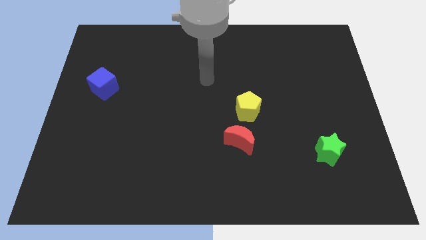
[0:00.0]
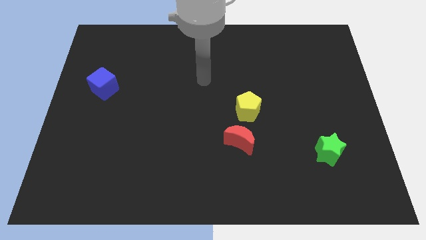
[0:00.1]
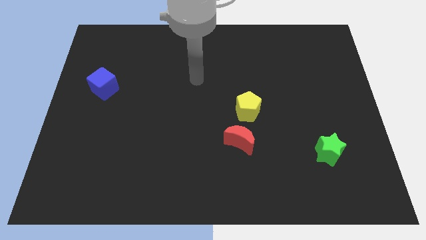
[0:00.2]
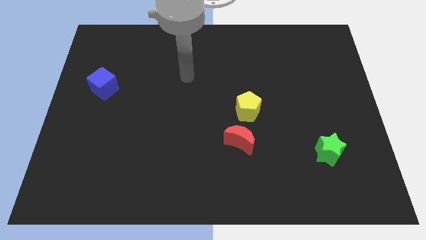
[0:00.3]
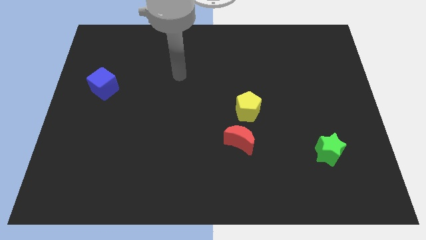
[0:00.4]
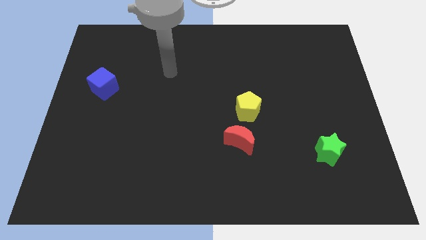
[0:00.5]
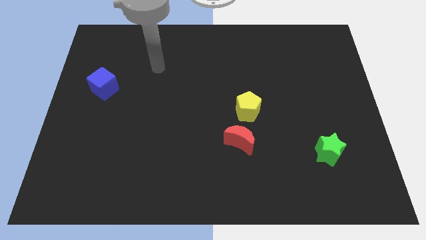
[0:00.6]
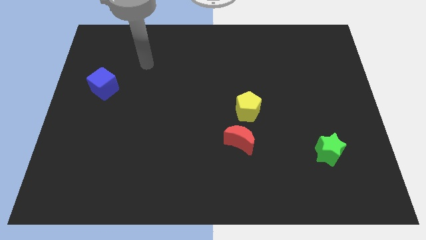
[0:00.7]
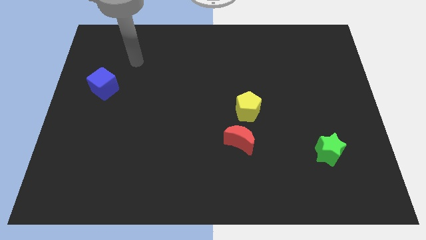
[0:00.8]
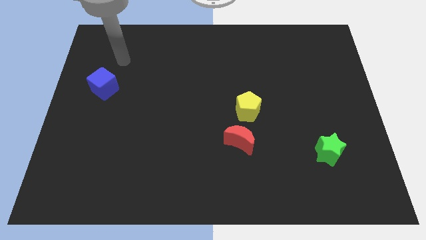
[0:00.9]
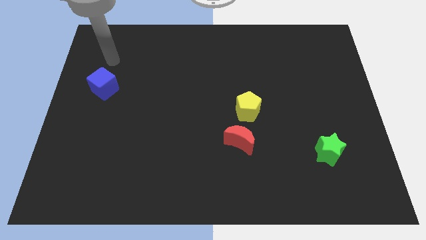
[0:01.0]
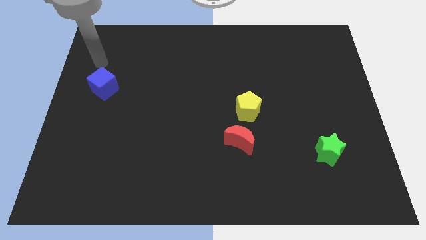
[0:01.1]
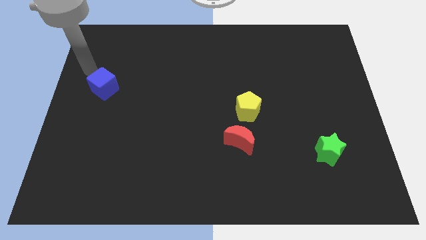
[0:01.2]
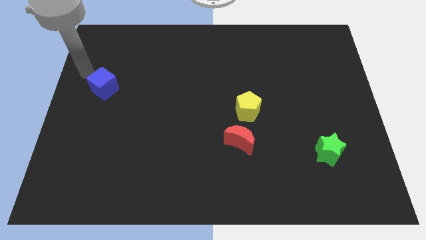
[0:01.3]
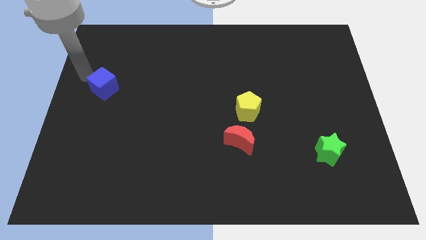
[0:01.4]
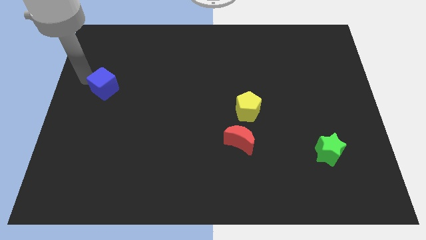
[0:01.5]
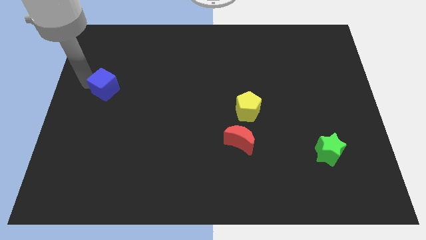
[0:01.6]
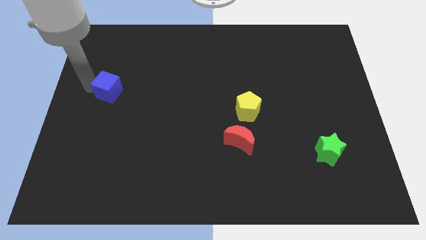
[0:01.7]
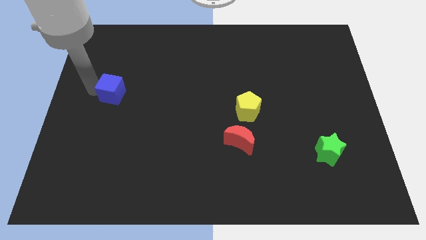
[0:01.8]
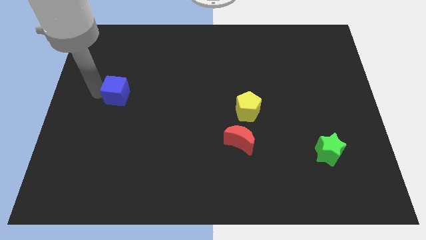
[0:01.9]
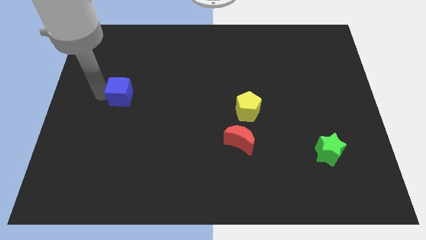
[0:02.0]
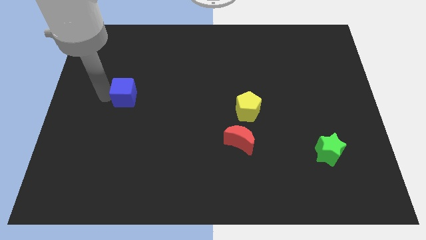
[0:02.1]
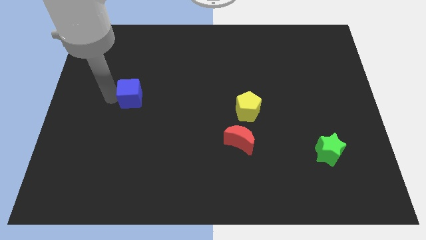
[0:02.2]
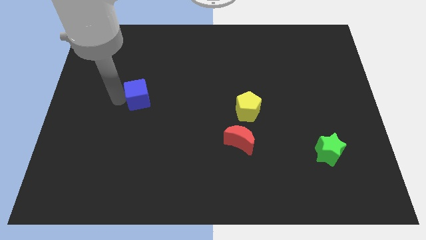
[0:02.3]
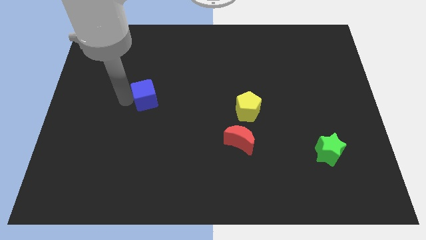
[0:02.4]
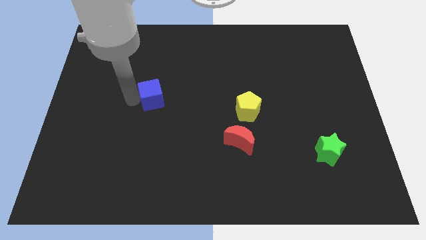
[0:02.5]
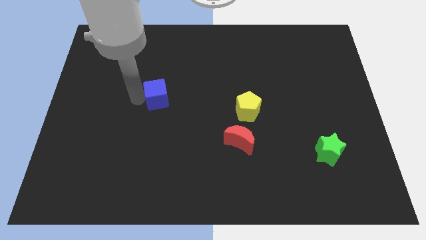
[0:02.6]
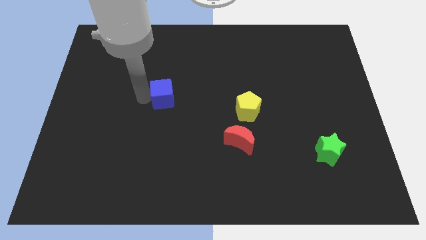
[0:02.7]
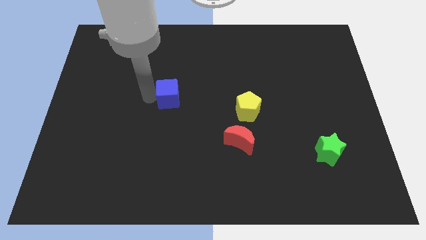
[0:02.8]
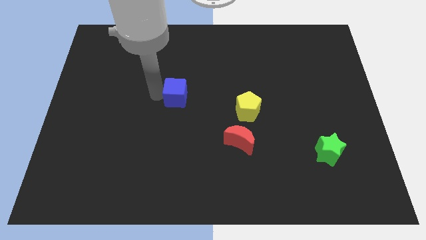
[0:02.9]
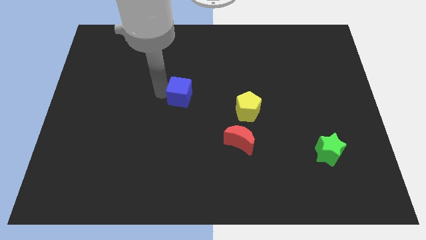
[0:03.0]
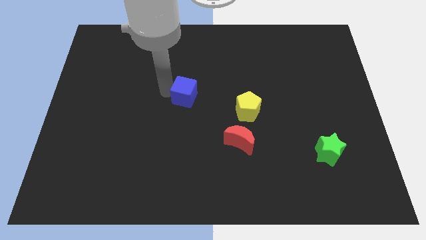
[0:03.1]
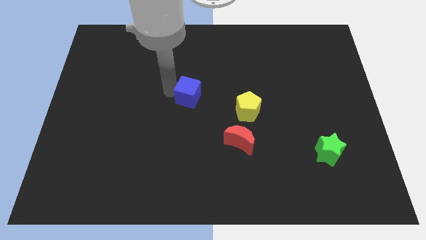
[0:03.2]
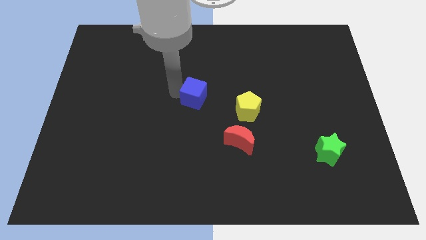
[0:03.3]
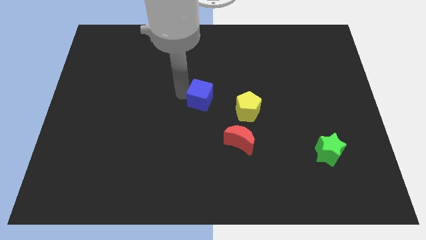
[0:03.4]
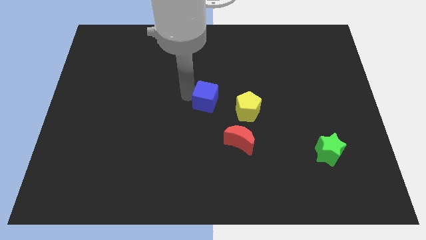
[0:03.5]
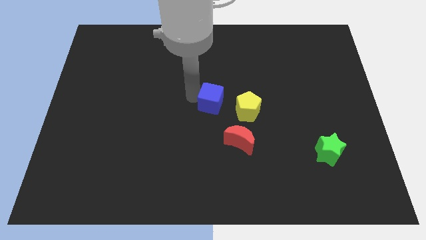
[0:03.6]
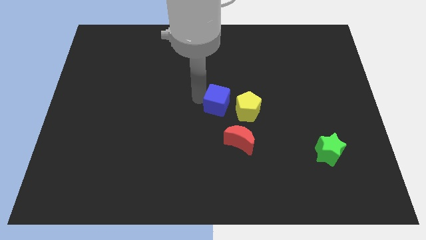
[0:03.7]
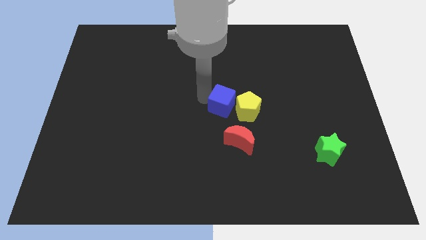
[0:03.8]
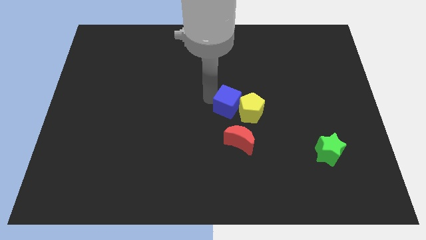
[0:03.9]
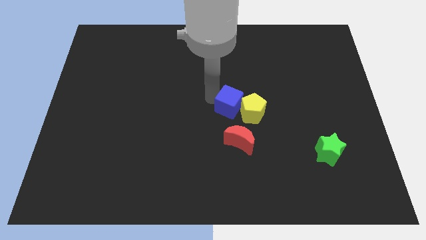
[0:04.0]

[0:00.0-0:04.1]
move the blue cube next to the yellow block

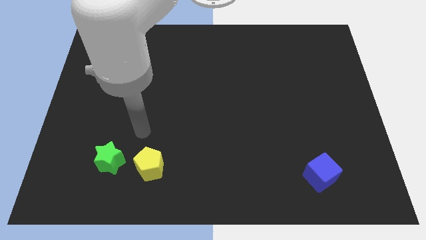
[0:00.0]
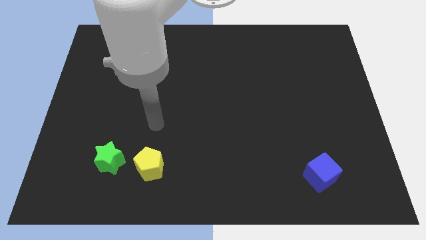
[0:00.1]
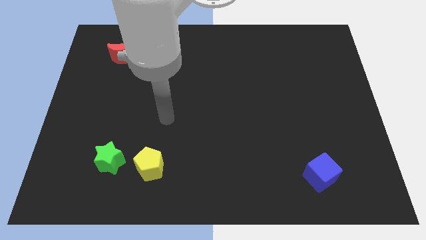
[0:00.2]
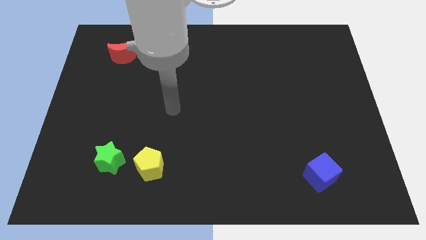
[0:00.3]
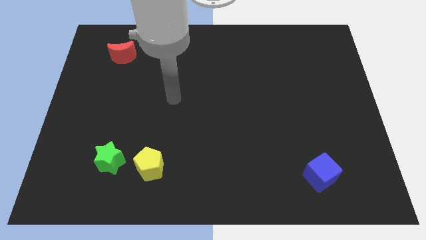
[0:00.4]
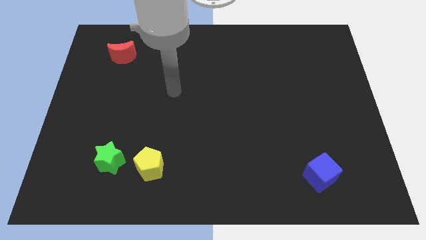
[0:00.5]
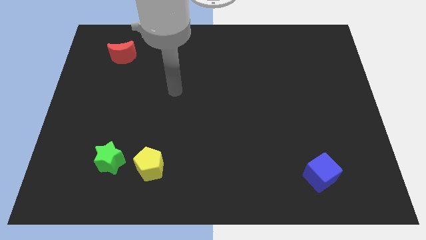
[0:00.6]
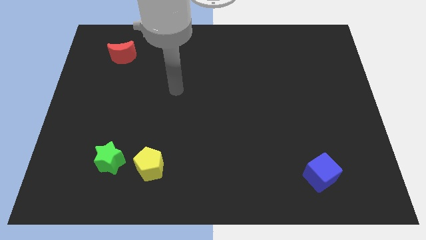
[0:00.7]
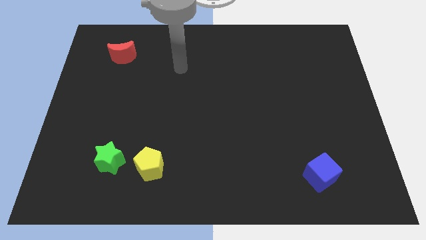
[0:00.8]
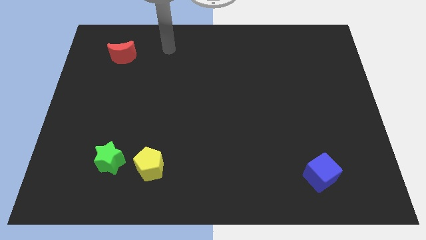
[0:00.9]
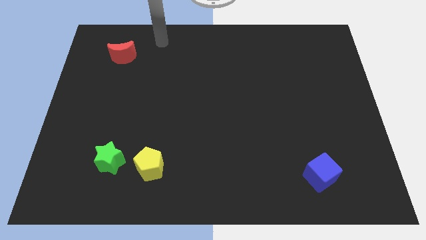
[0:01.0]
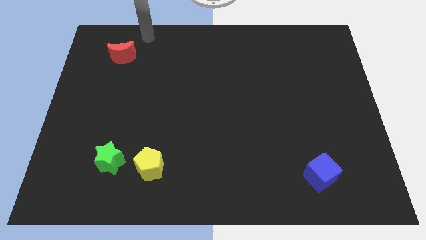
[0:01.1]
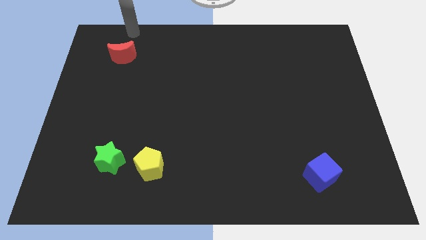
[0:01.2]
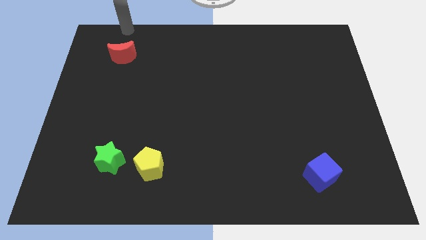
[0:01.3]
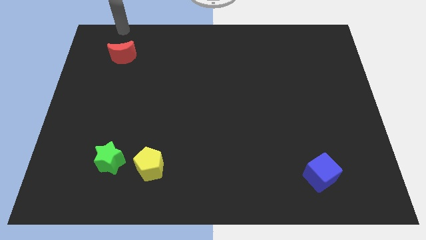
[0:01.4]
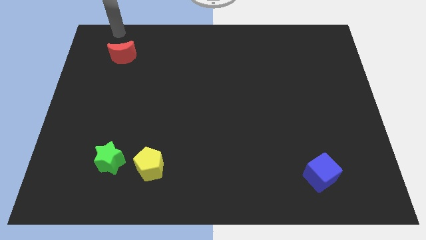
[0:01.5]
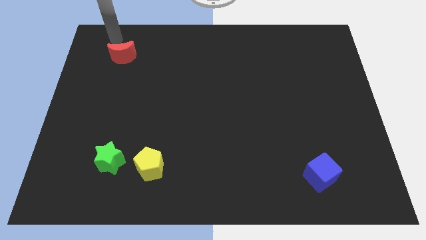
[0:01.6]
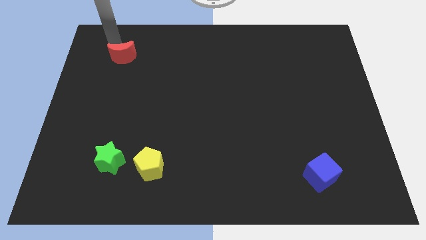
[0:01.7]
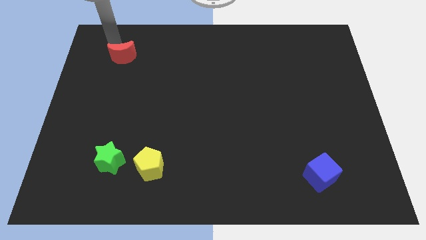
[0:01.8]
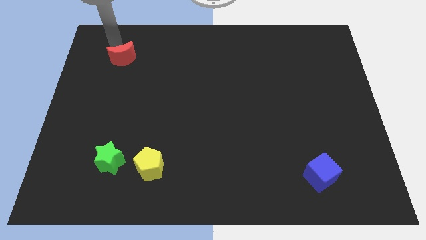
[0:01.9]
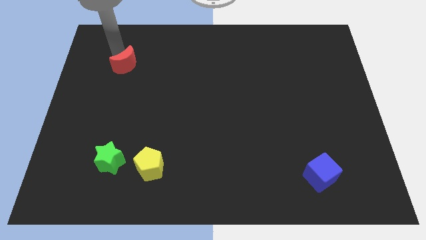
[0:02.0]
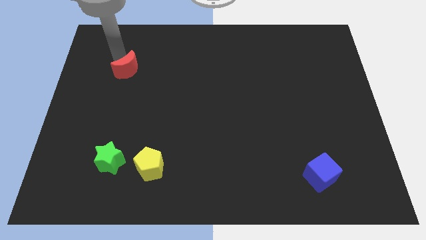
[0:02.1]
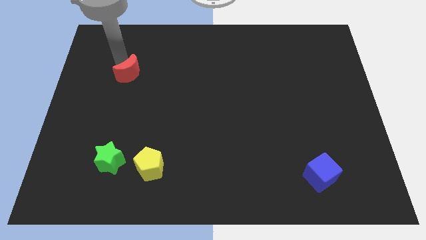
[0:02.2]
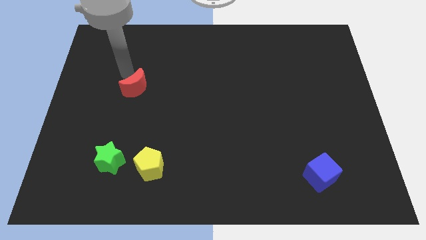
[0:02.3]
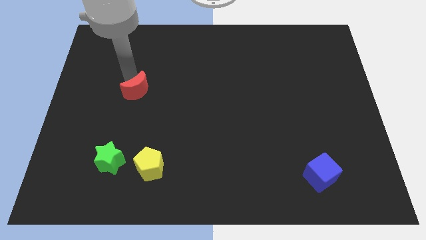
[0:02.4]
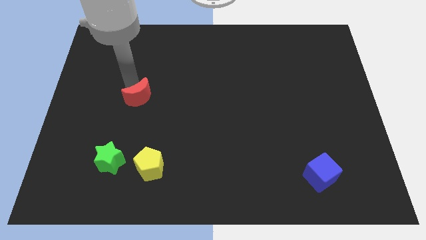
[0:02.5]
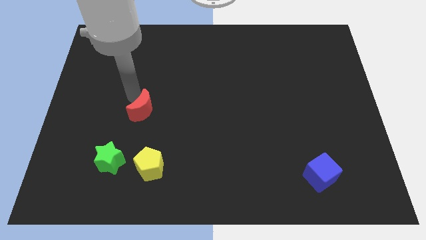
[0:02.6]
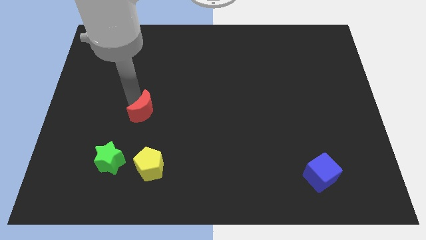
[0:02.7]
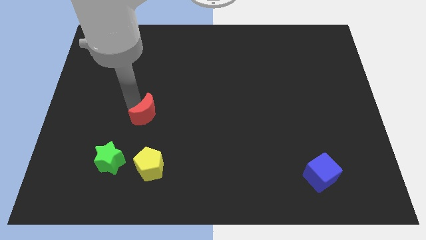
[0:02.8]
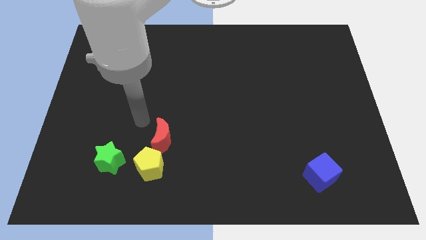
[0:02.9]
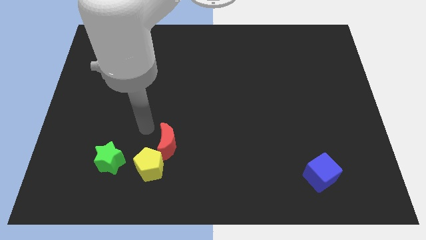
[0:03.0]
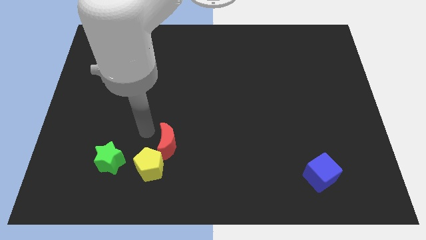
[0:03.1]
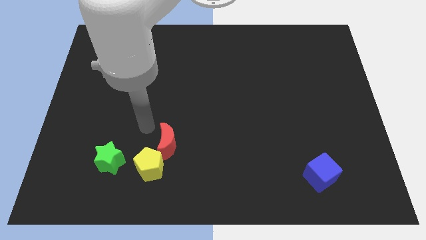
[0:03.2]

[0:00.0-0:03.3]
move the red moon close to the pentagon

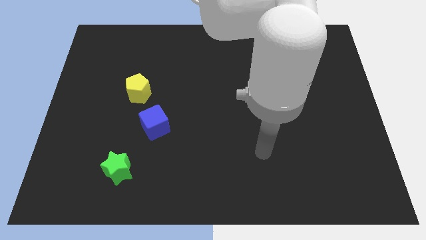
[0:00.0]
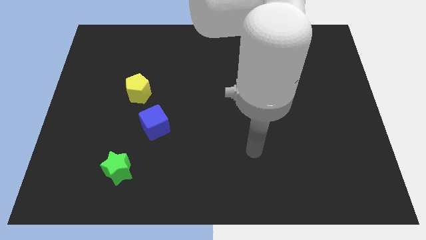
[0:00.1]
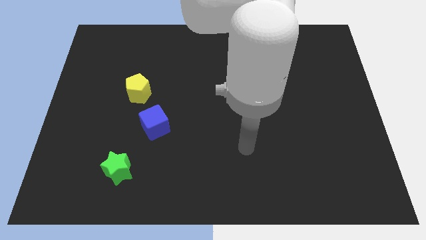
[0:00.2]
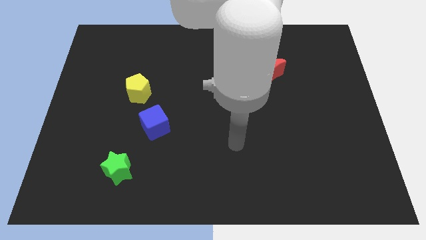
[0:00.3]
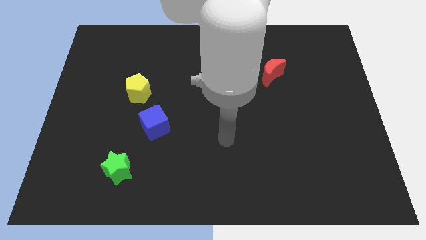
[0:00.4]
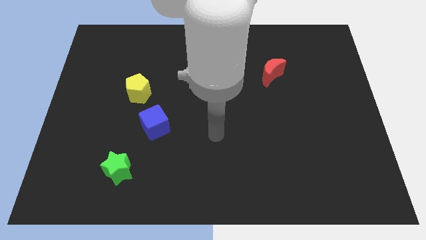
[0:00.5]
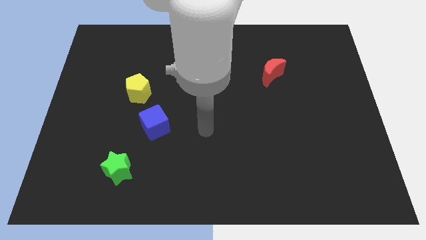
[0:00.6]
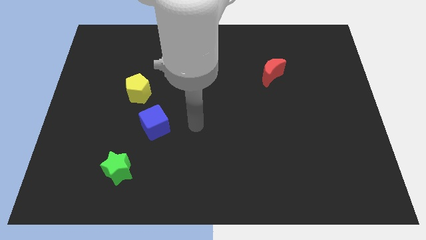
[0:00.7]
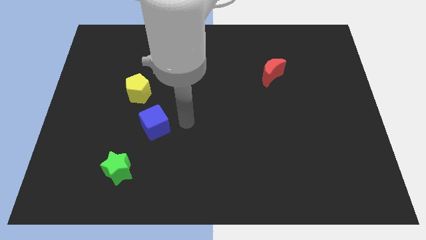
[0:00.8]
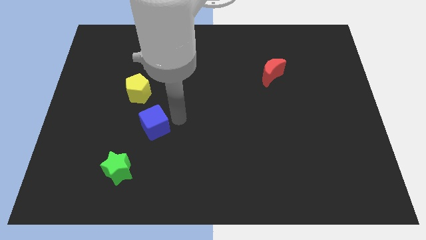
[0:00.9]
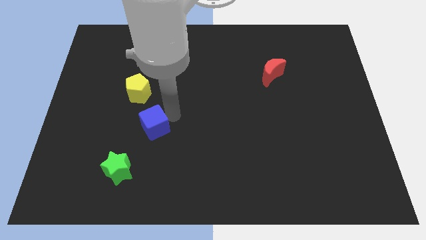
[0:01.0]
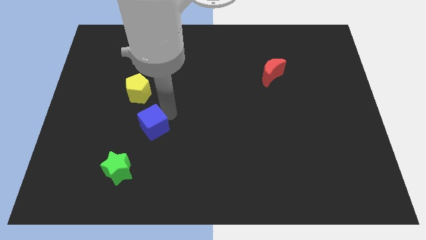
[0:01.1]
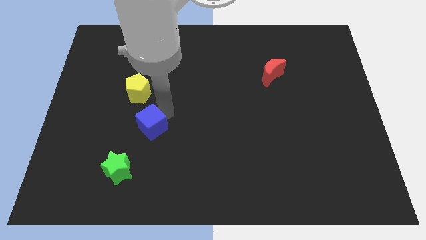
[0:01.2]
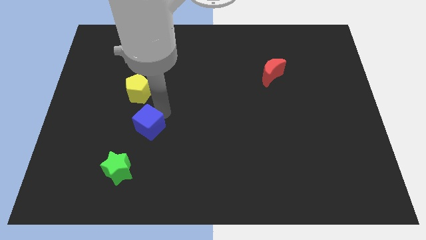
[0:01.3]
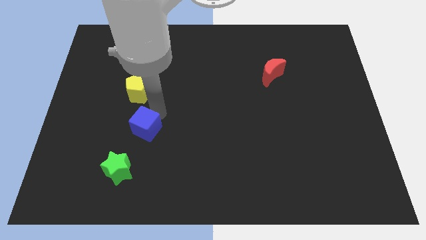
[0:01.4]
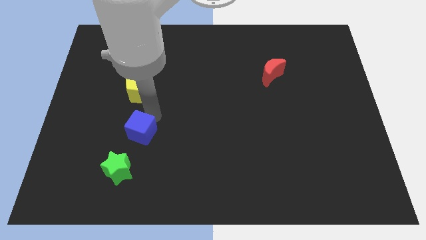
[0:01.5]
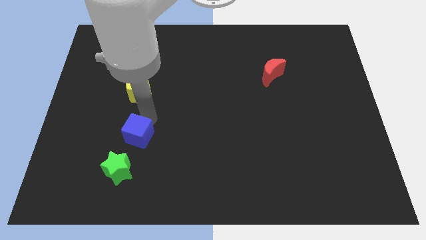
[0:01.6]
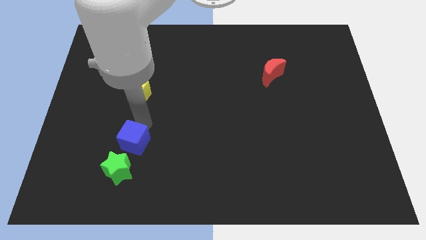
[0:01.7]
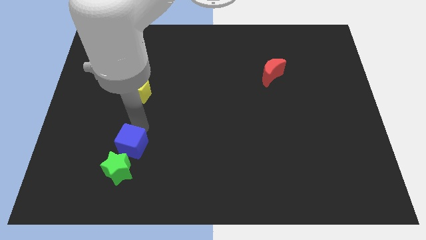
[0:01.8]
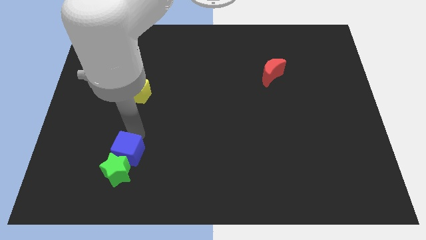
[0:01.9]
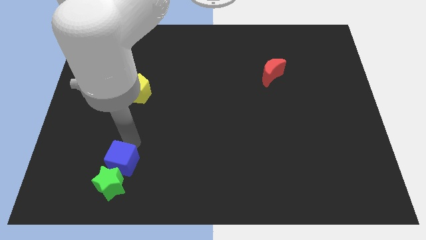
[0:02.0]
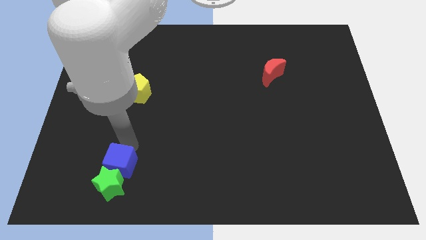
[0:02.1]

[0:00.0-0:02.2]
put the blue cube next to the green block
